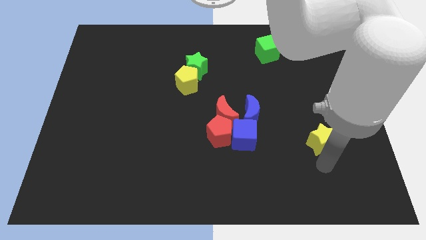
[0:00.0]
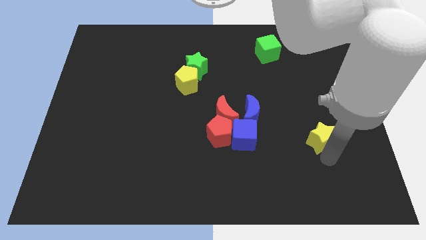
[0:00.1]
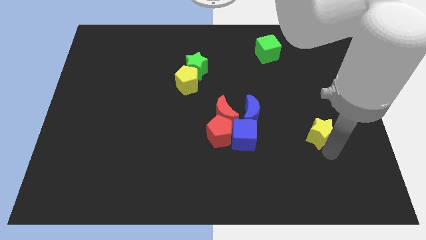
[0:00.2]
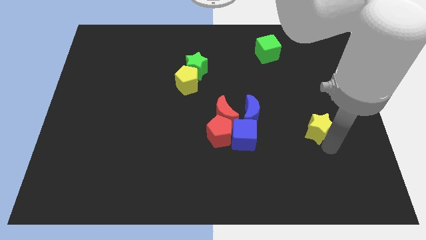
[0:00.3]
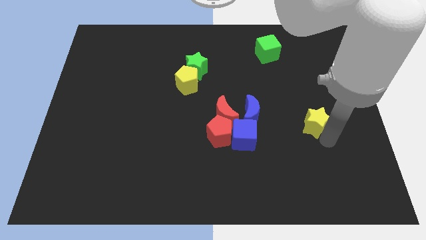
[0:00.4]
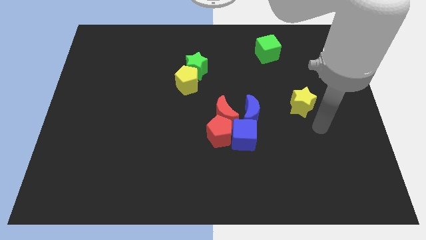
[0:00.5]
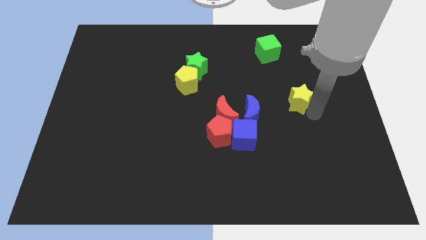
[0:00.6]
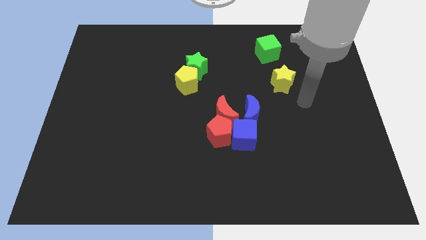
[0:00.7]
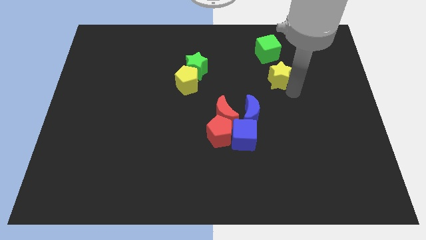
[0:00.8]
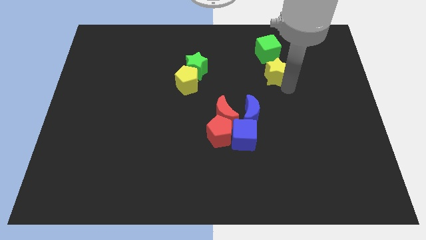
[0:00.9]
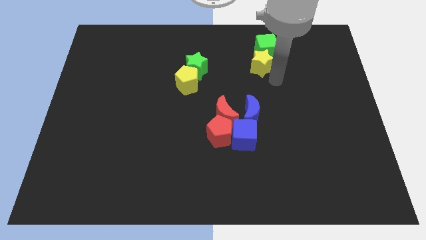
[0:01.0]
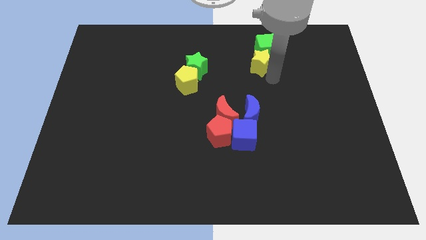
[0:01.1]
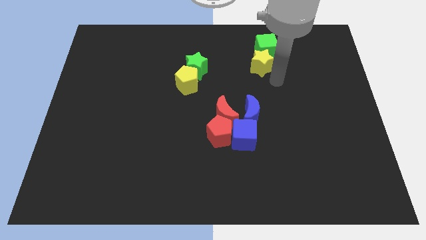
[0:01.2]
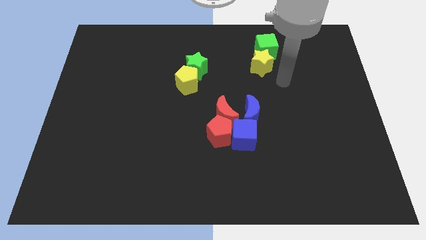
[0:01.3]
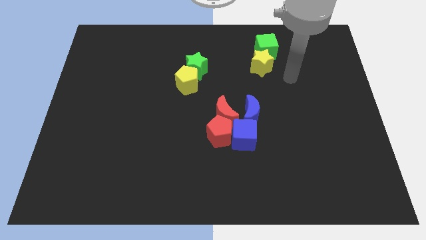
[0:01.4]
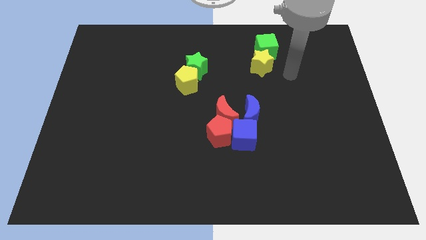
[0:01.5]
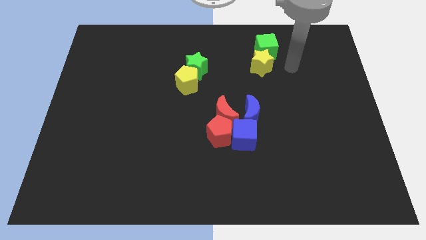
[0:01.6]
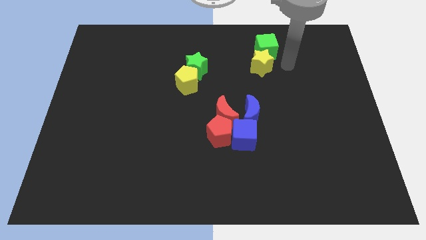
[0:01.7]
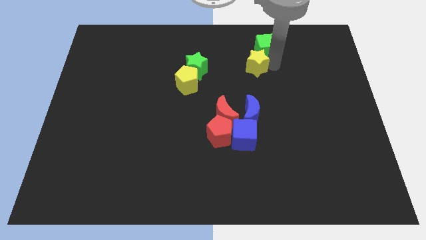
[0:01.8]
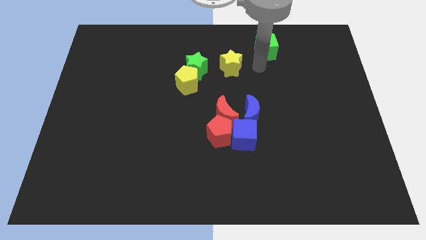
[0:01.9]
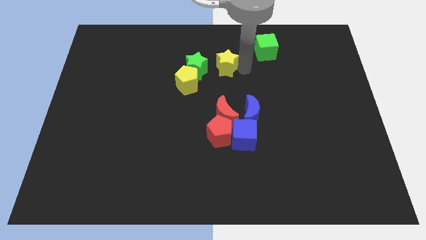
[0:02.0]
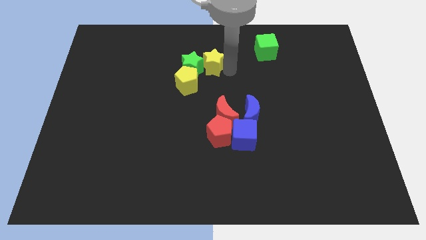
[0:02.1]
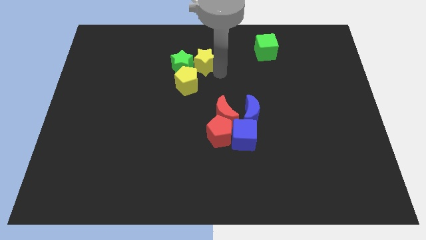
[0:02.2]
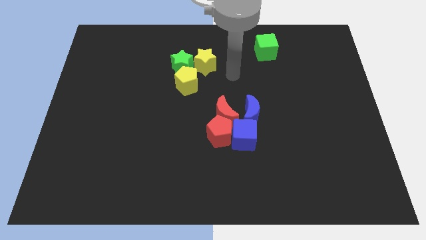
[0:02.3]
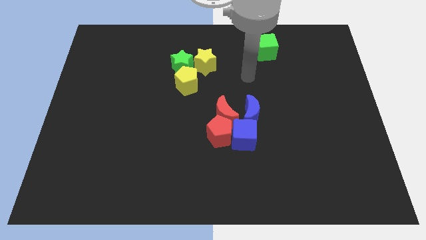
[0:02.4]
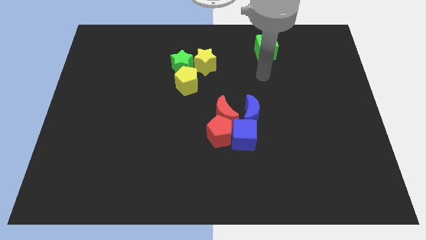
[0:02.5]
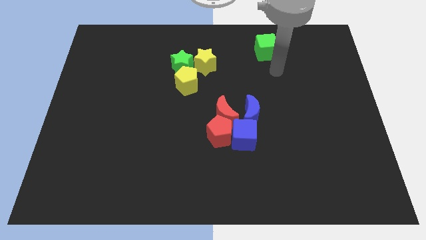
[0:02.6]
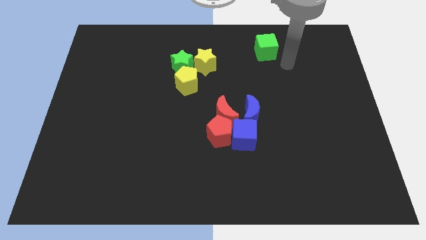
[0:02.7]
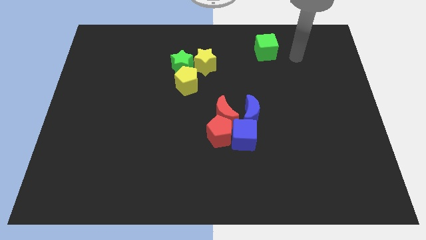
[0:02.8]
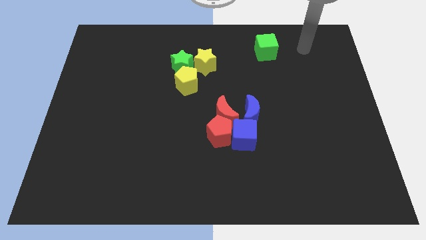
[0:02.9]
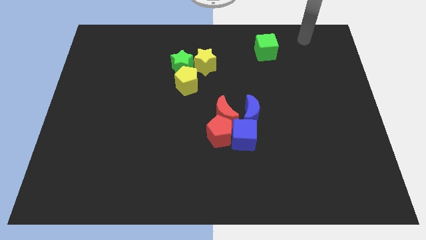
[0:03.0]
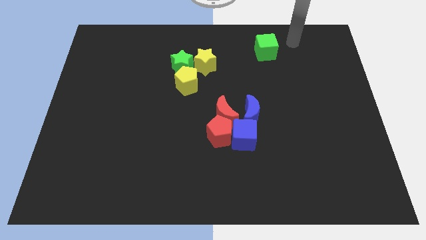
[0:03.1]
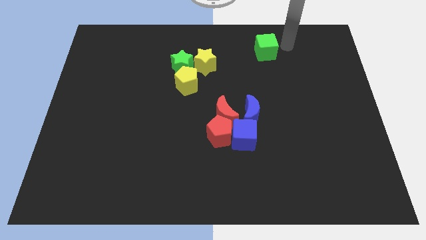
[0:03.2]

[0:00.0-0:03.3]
push yellow star into green star

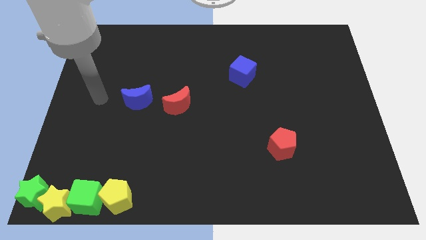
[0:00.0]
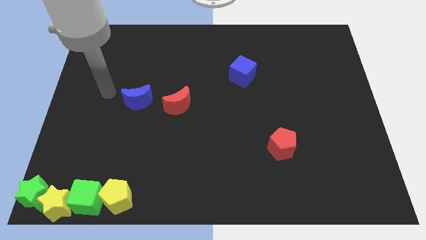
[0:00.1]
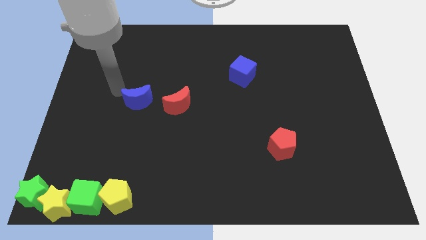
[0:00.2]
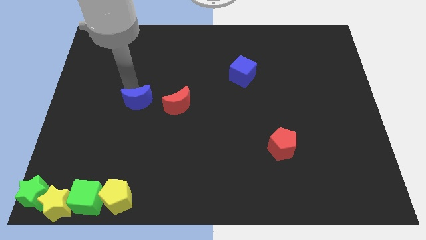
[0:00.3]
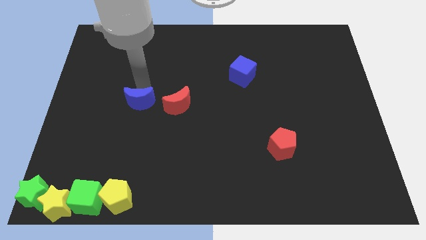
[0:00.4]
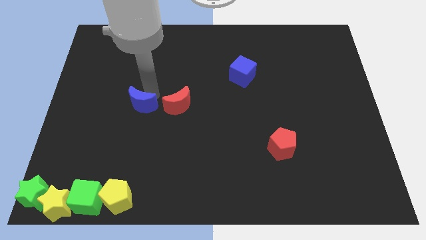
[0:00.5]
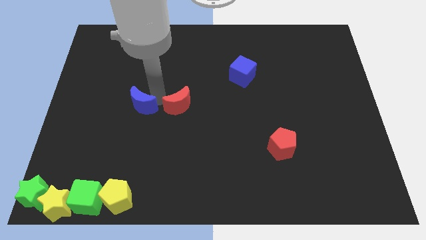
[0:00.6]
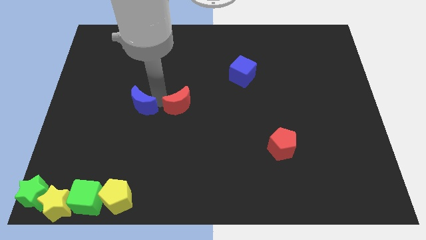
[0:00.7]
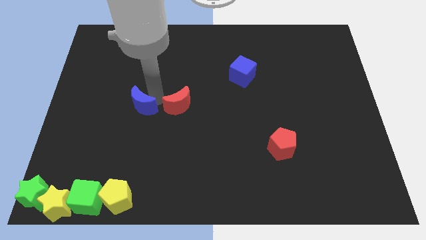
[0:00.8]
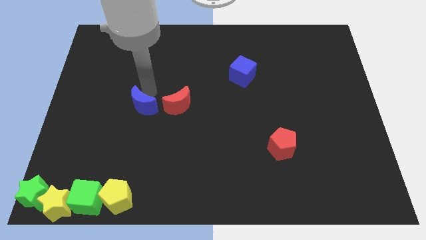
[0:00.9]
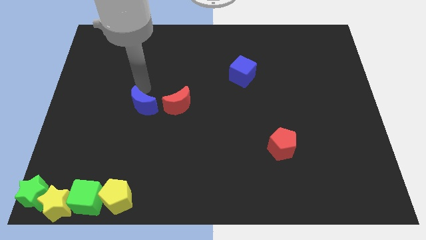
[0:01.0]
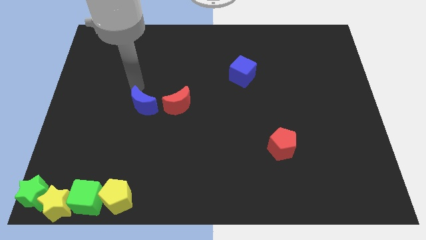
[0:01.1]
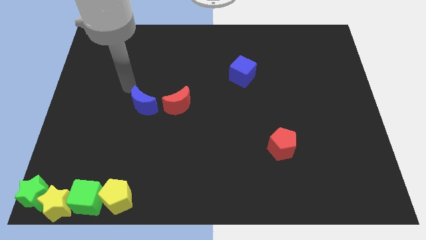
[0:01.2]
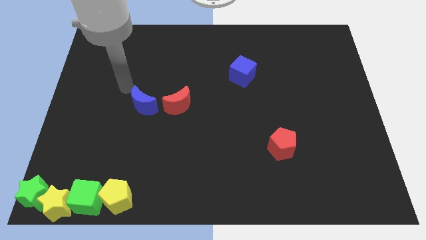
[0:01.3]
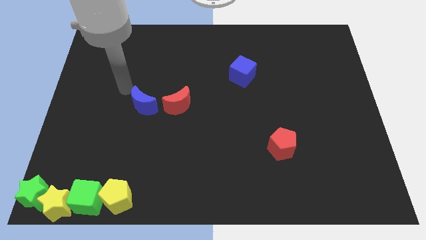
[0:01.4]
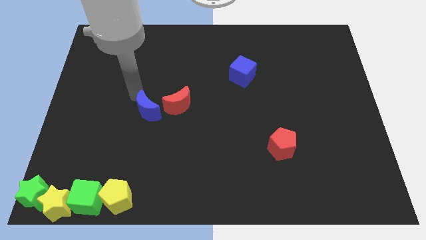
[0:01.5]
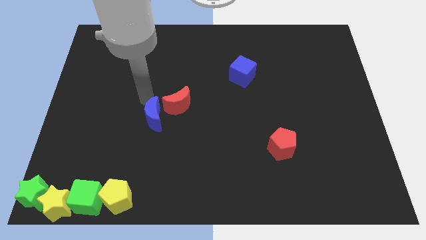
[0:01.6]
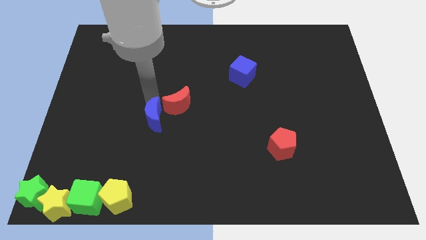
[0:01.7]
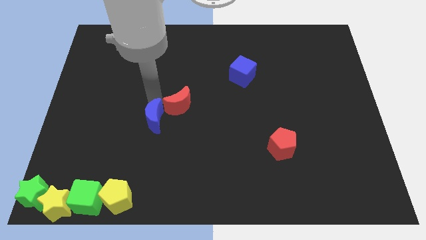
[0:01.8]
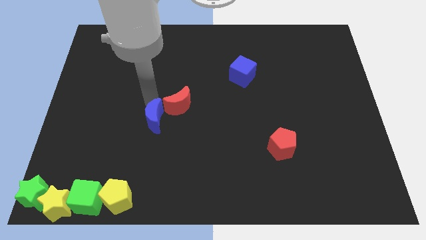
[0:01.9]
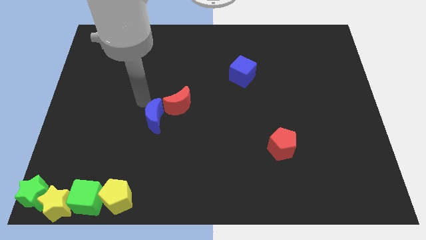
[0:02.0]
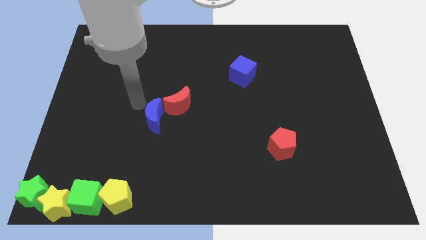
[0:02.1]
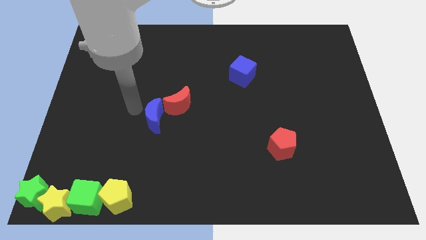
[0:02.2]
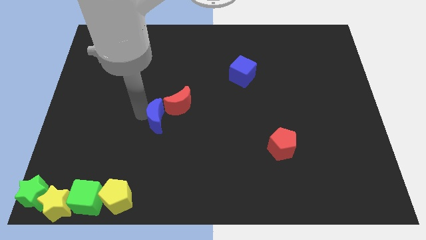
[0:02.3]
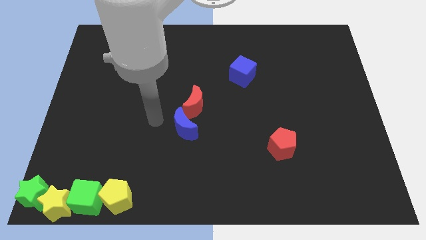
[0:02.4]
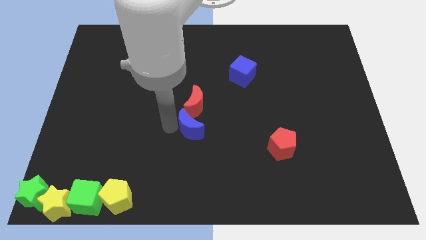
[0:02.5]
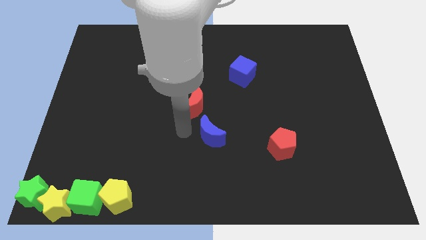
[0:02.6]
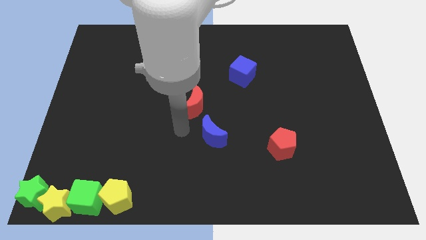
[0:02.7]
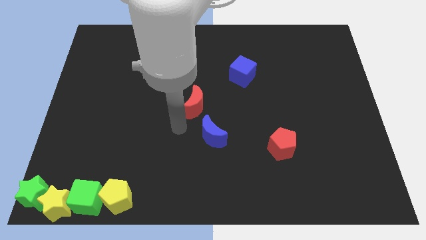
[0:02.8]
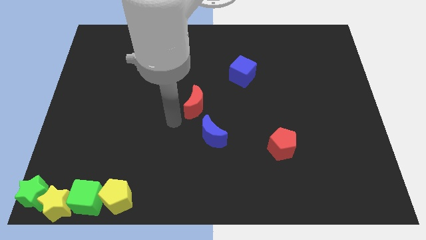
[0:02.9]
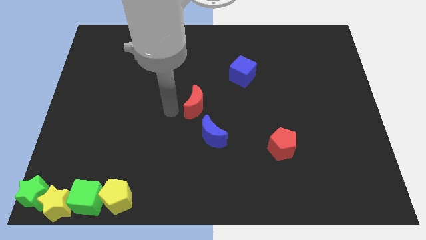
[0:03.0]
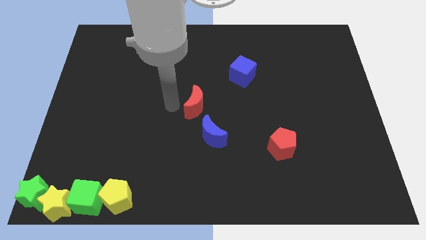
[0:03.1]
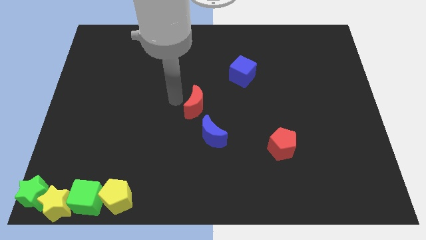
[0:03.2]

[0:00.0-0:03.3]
move the blue crescent to the bottom center of the board

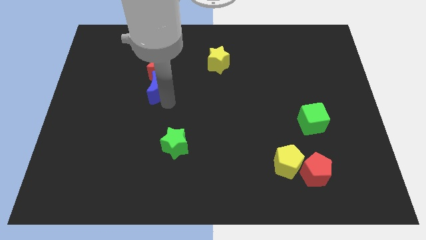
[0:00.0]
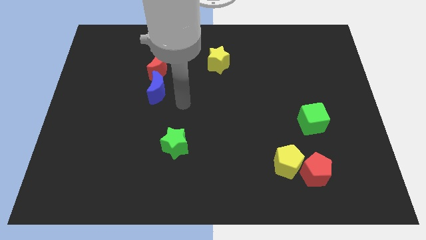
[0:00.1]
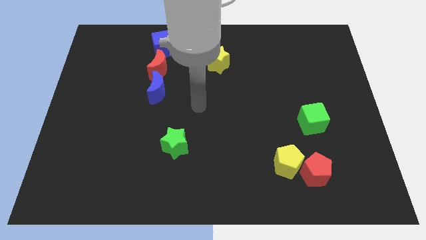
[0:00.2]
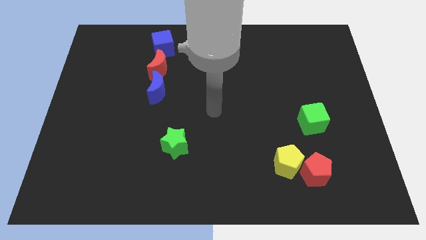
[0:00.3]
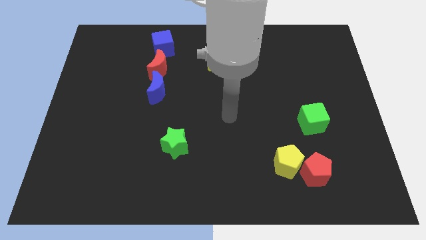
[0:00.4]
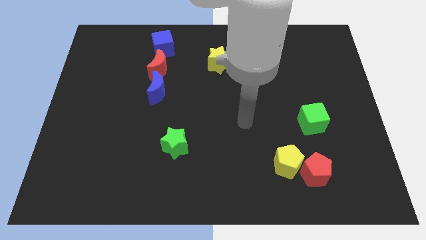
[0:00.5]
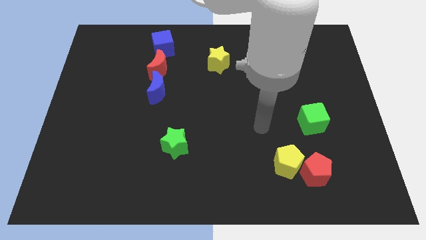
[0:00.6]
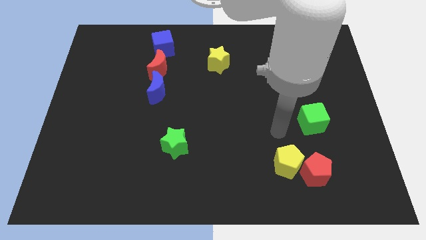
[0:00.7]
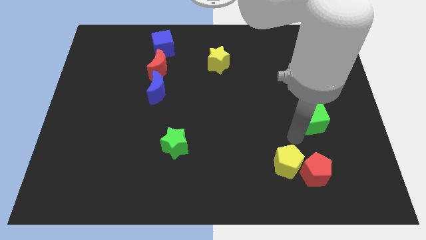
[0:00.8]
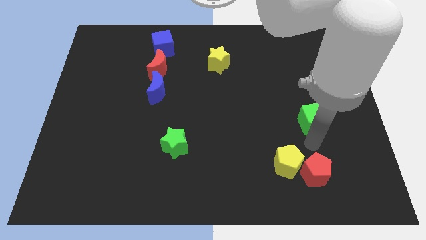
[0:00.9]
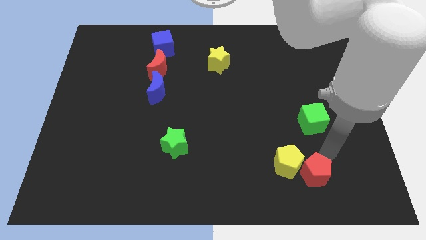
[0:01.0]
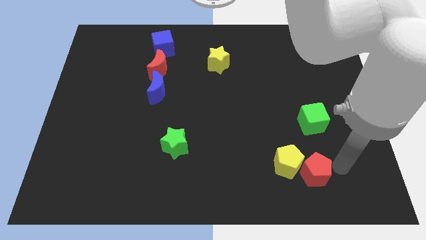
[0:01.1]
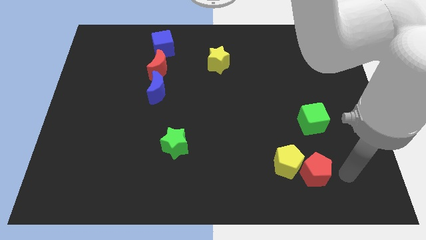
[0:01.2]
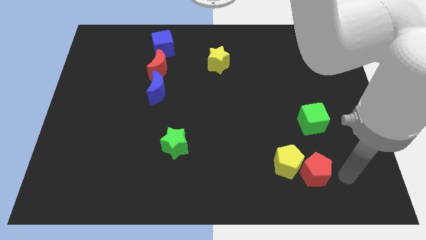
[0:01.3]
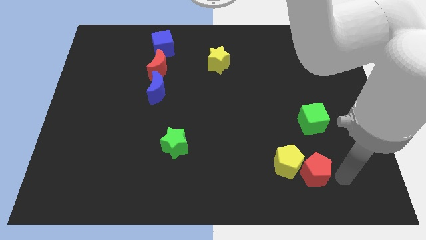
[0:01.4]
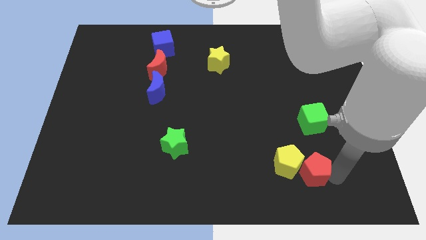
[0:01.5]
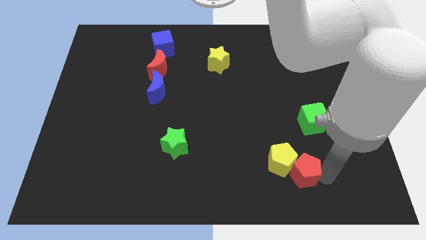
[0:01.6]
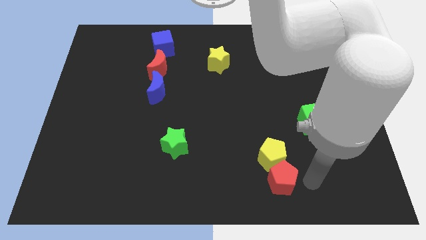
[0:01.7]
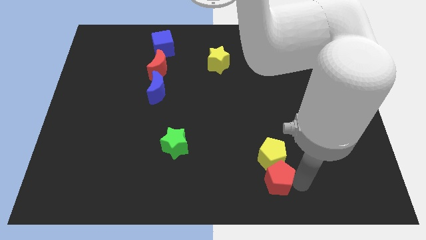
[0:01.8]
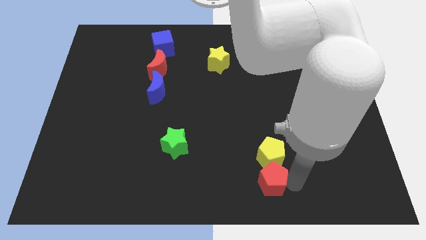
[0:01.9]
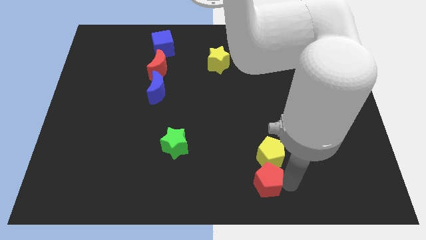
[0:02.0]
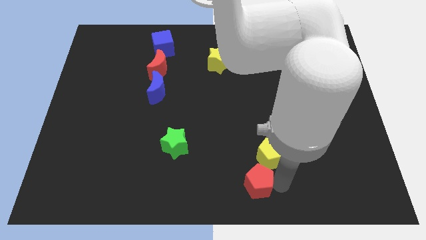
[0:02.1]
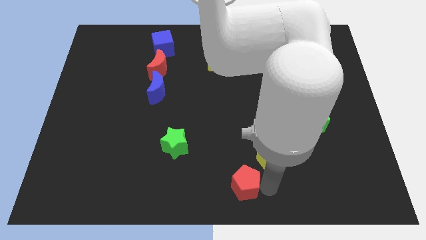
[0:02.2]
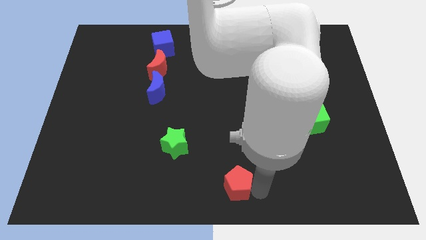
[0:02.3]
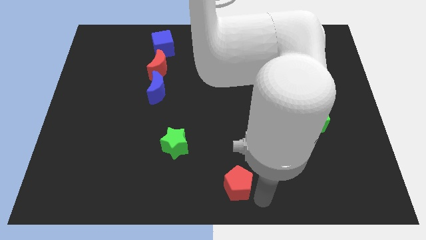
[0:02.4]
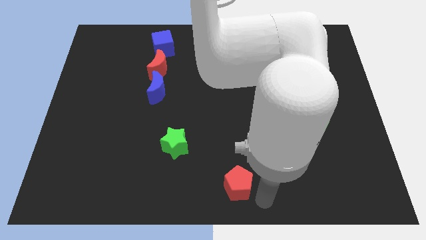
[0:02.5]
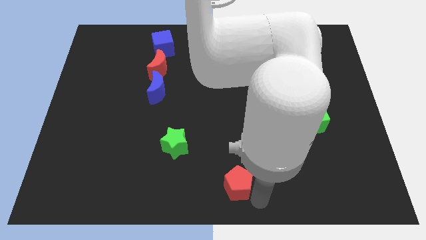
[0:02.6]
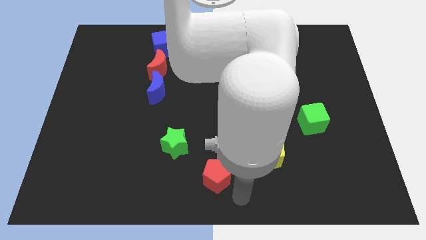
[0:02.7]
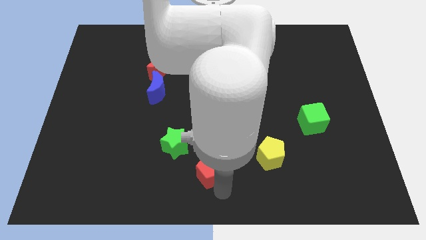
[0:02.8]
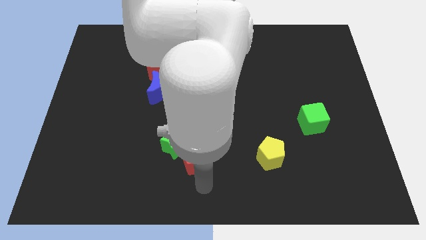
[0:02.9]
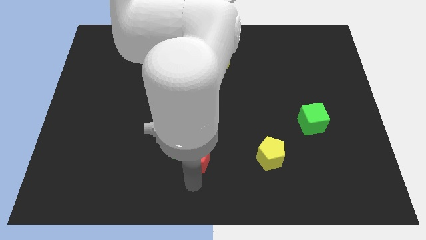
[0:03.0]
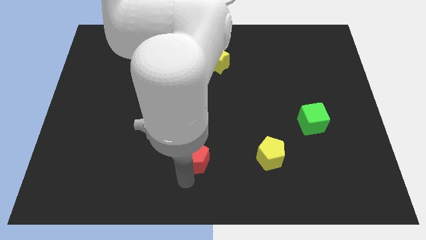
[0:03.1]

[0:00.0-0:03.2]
push the red pentagon into green star
